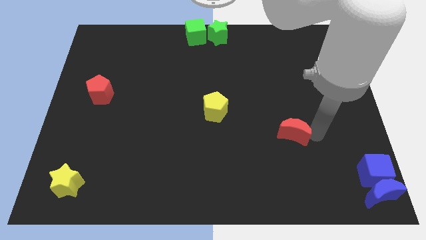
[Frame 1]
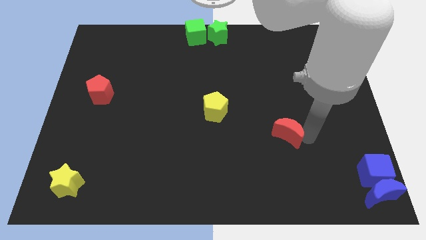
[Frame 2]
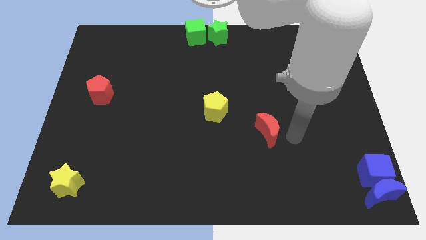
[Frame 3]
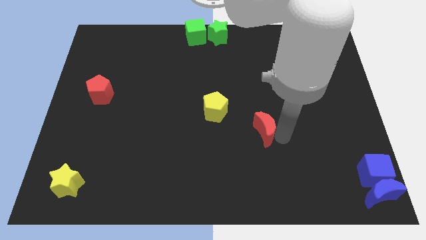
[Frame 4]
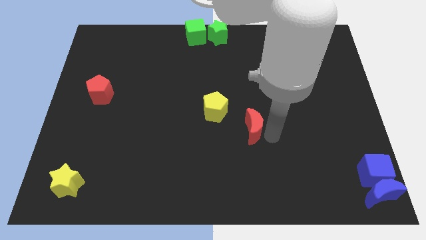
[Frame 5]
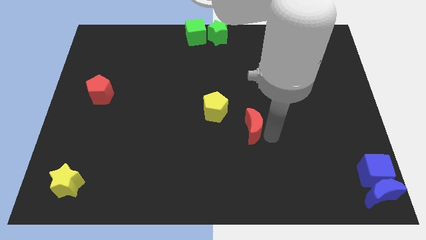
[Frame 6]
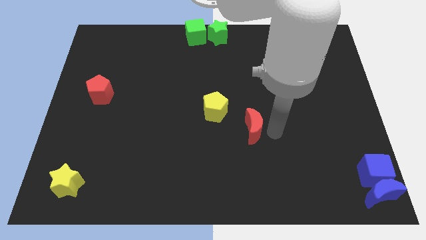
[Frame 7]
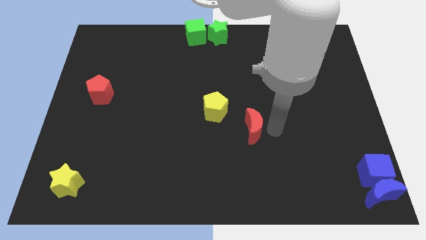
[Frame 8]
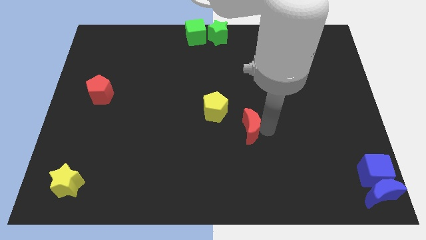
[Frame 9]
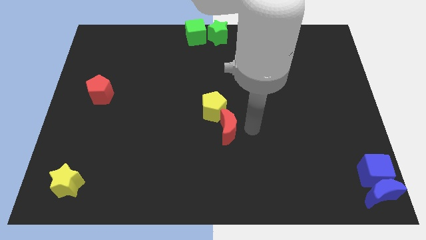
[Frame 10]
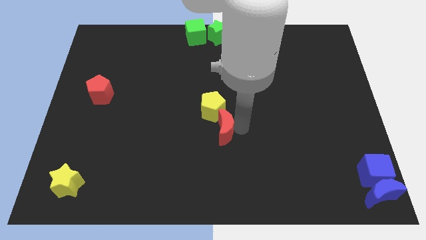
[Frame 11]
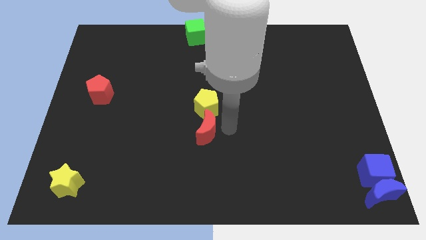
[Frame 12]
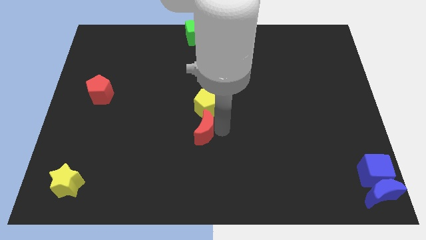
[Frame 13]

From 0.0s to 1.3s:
place red moon below yellow pentagon

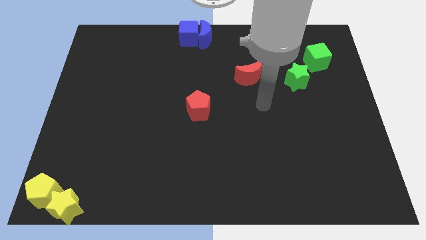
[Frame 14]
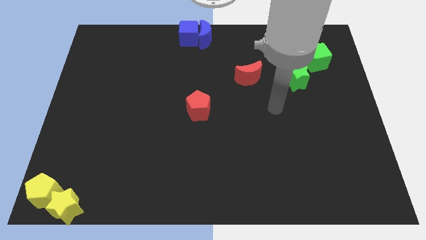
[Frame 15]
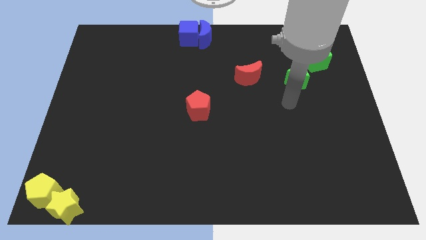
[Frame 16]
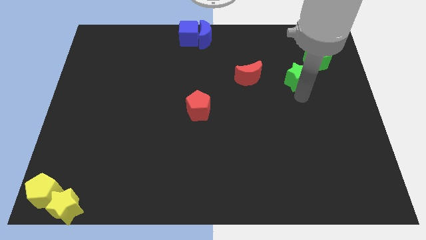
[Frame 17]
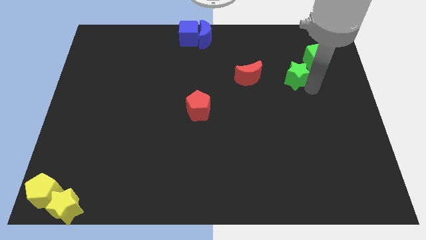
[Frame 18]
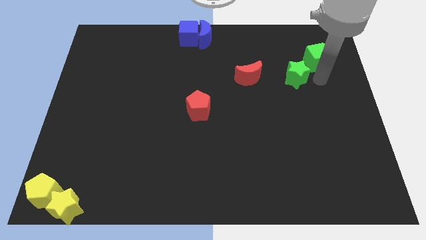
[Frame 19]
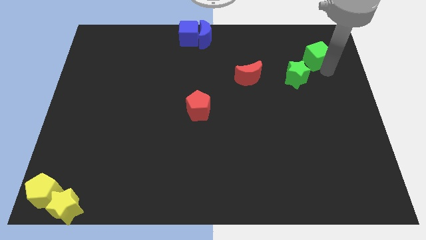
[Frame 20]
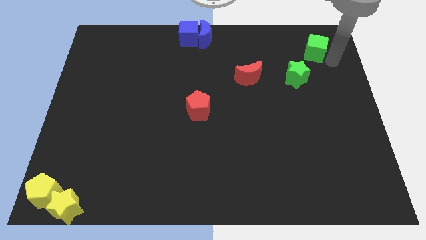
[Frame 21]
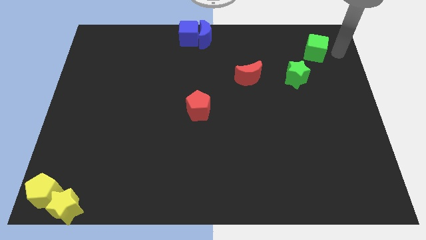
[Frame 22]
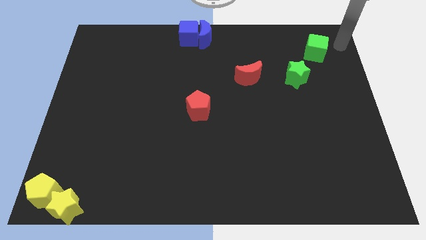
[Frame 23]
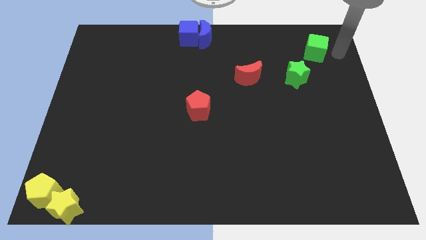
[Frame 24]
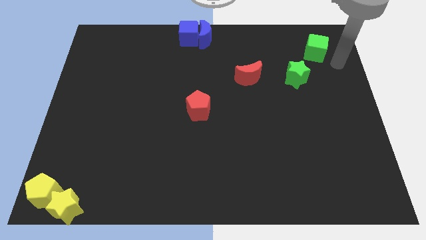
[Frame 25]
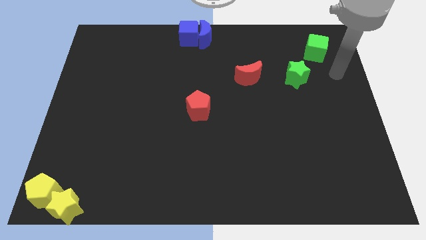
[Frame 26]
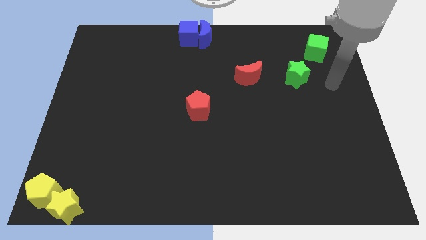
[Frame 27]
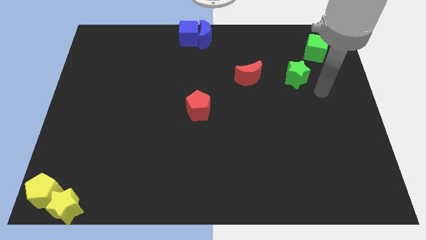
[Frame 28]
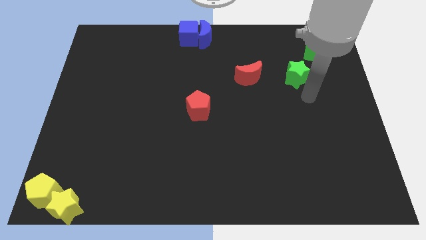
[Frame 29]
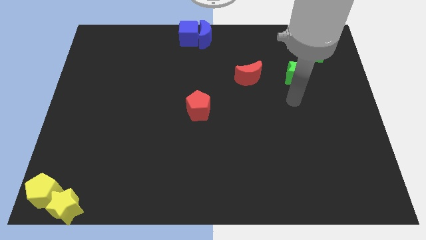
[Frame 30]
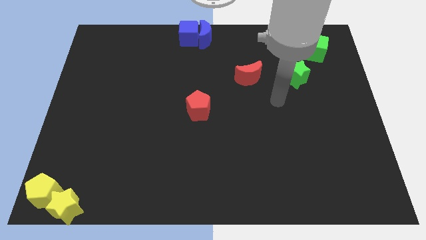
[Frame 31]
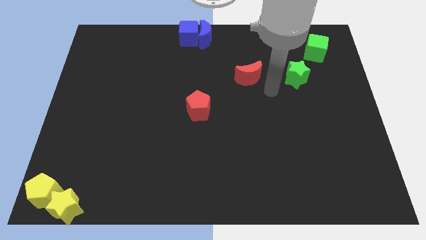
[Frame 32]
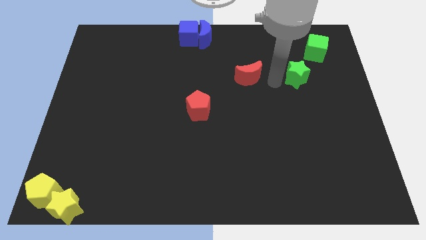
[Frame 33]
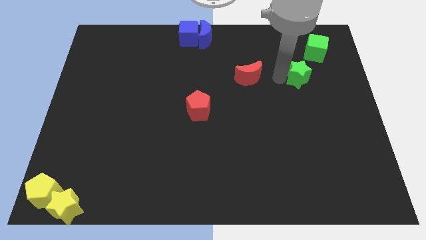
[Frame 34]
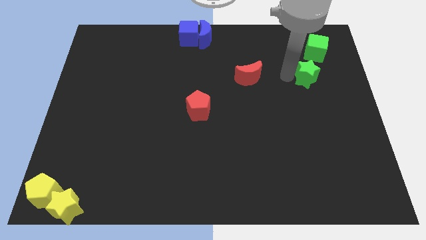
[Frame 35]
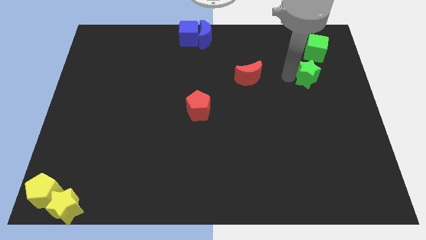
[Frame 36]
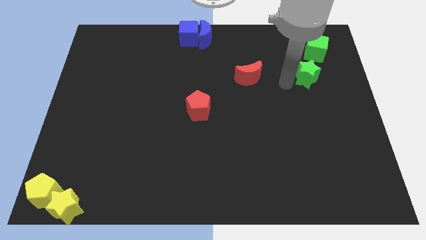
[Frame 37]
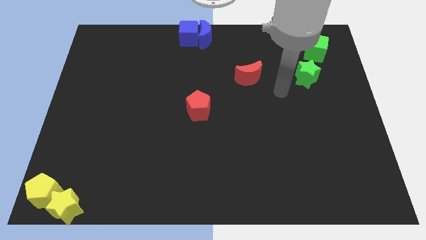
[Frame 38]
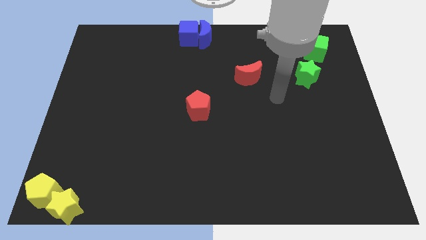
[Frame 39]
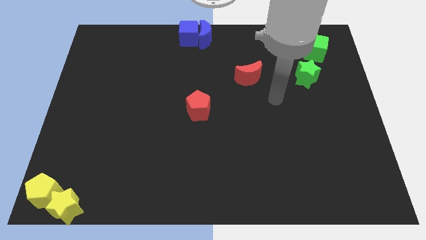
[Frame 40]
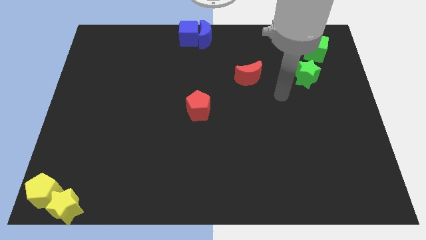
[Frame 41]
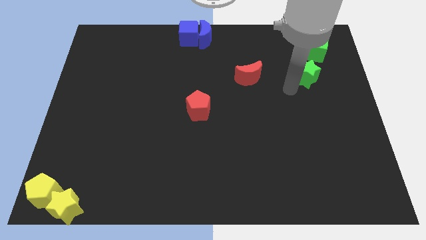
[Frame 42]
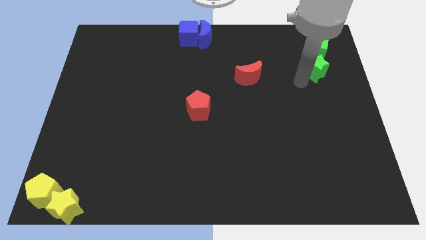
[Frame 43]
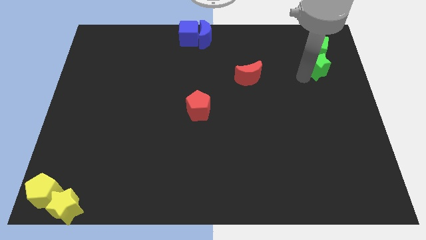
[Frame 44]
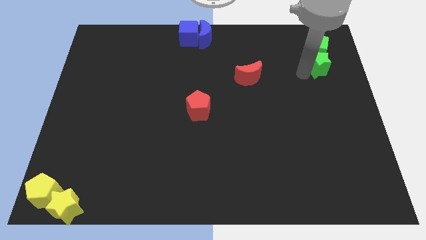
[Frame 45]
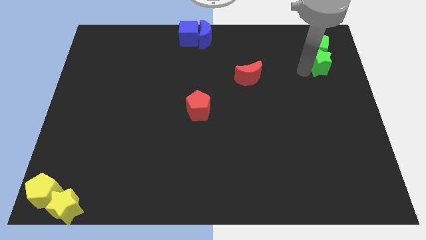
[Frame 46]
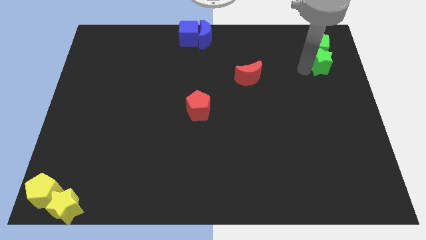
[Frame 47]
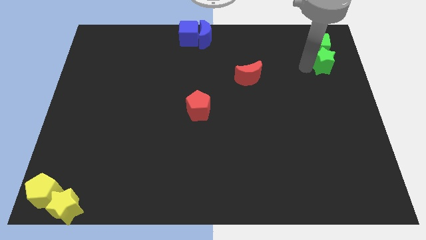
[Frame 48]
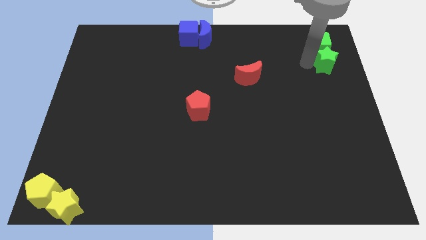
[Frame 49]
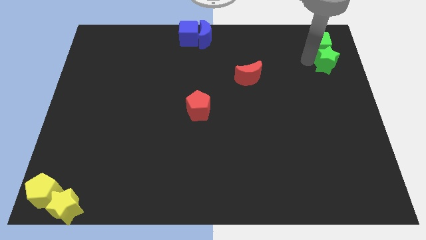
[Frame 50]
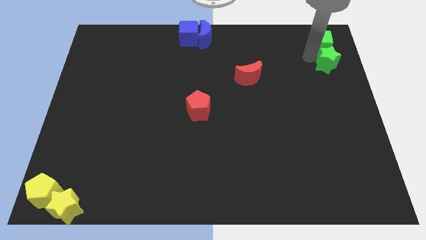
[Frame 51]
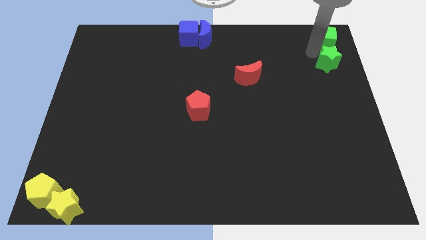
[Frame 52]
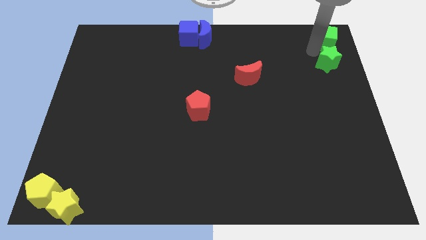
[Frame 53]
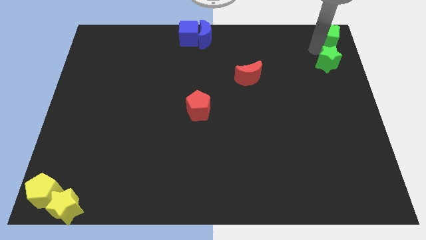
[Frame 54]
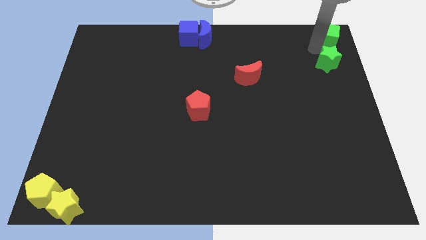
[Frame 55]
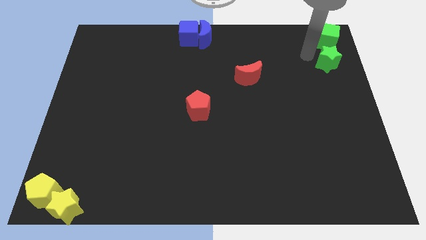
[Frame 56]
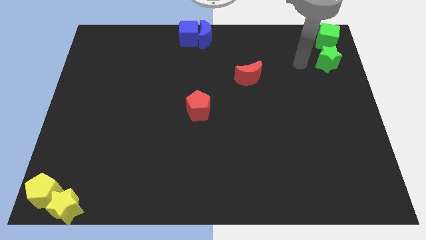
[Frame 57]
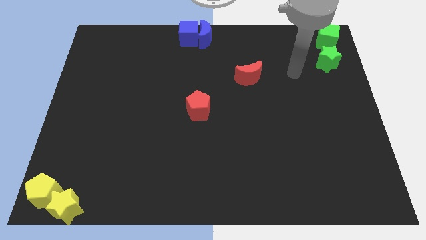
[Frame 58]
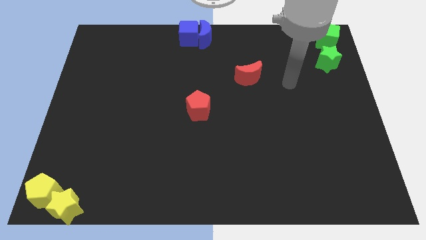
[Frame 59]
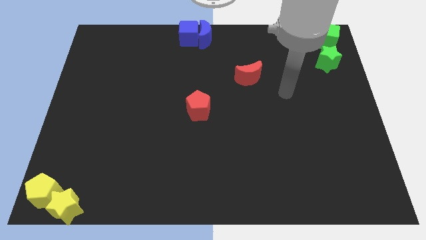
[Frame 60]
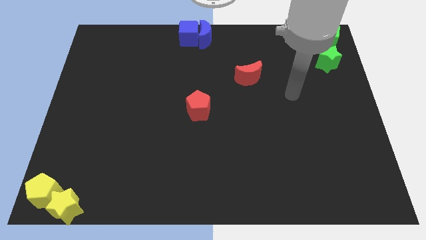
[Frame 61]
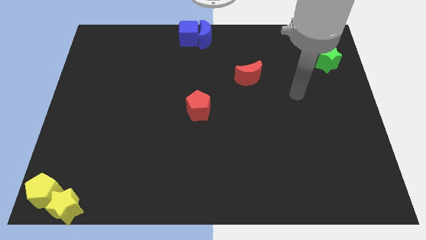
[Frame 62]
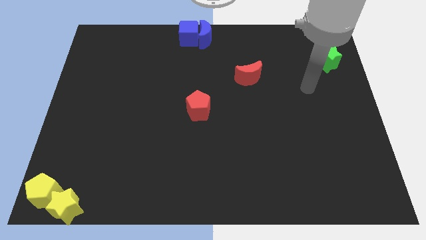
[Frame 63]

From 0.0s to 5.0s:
push green star and green cub to the top right corner

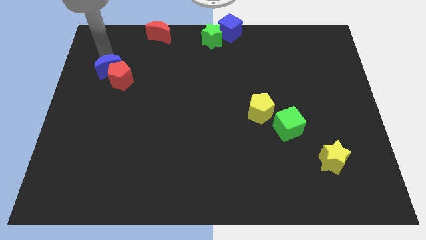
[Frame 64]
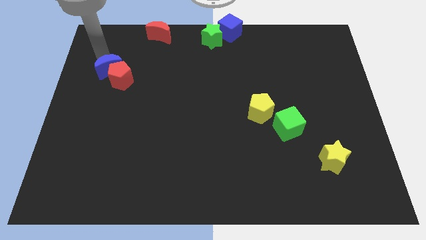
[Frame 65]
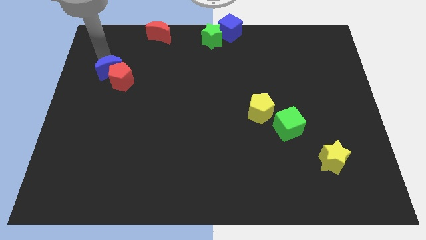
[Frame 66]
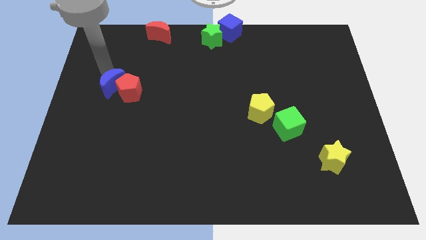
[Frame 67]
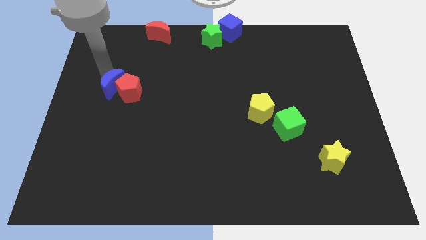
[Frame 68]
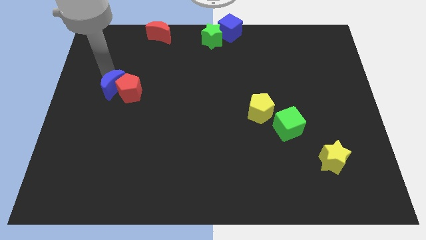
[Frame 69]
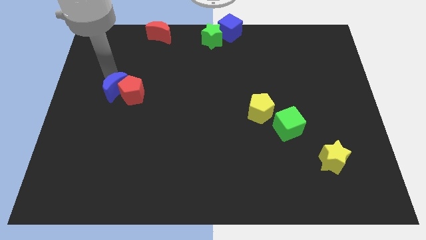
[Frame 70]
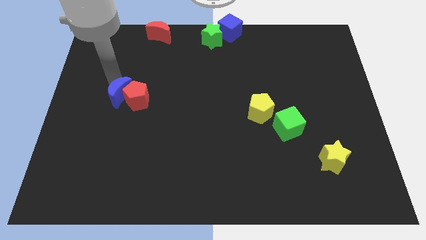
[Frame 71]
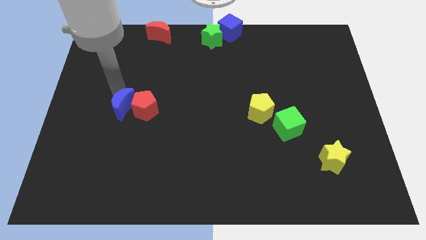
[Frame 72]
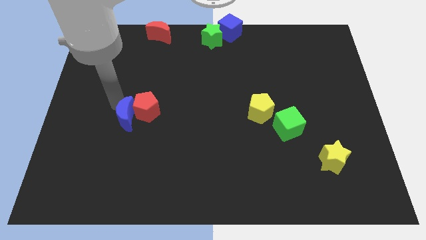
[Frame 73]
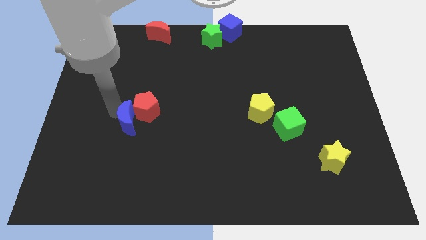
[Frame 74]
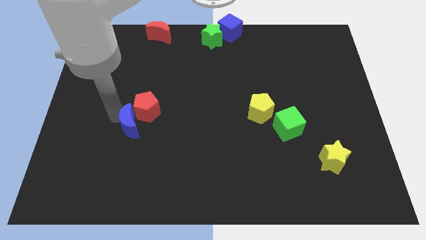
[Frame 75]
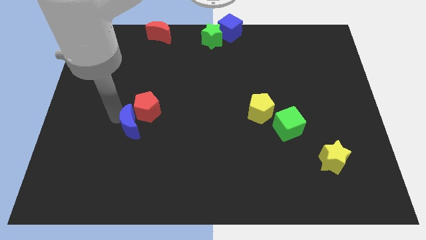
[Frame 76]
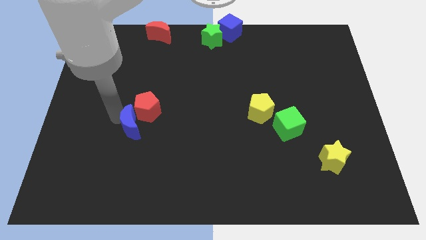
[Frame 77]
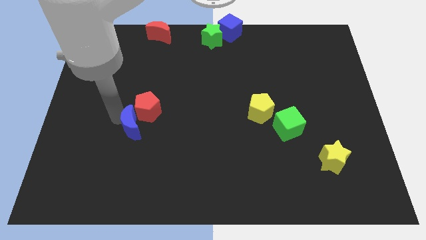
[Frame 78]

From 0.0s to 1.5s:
push the red pentagon with the blue moon

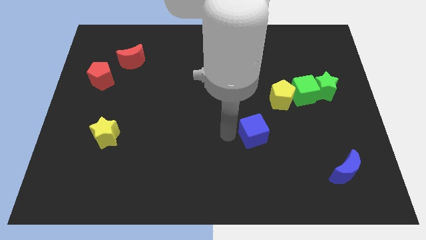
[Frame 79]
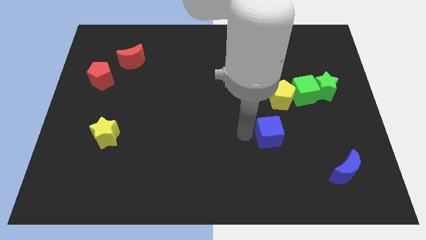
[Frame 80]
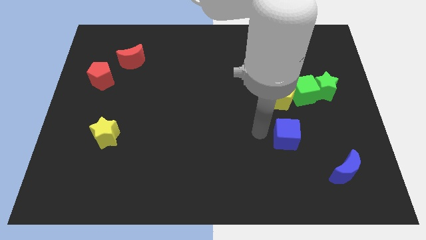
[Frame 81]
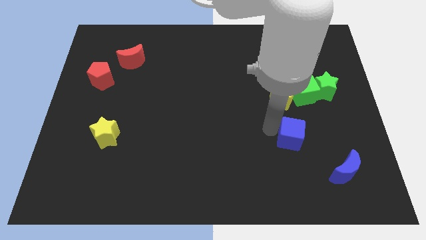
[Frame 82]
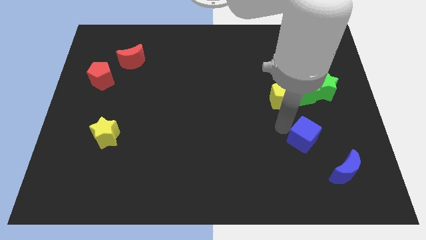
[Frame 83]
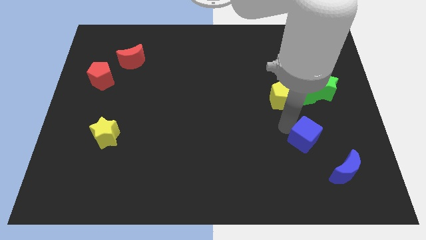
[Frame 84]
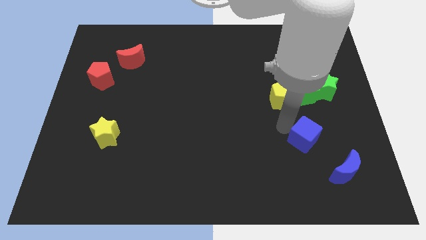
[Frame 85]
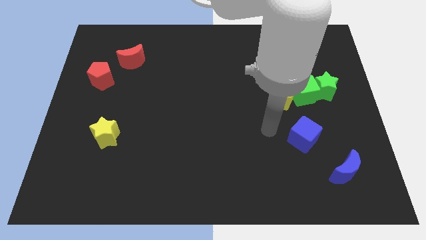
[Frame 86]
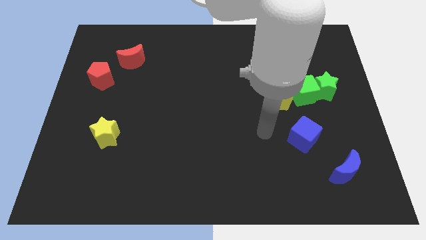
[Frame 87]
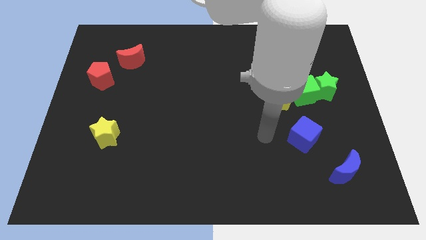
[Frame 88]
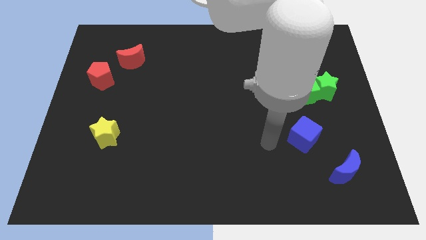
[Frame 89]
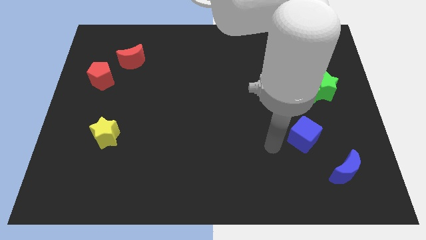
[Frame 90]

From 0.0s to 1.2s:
place the blue cube above the blue moon
